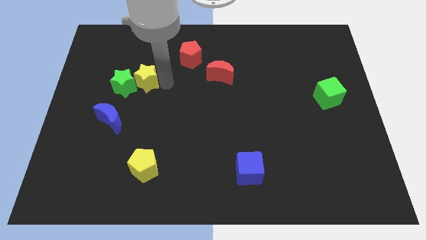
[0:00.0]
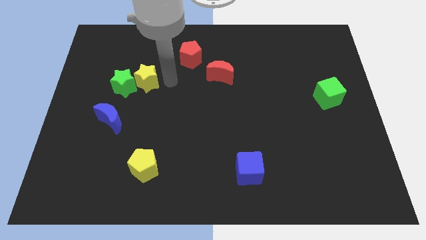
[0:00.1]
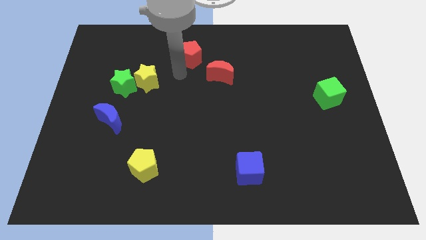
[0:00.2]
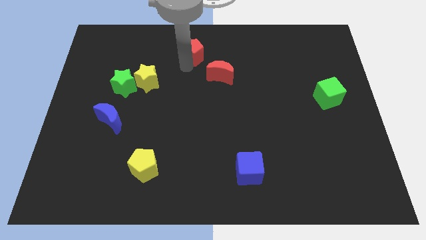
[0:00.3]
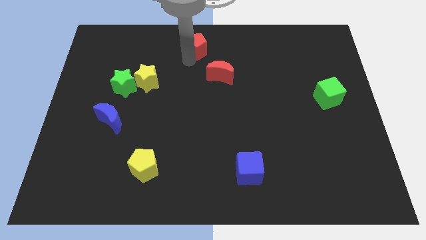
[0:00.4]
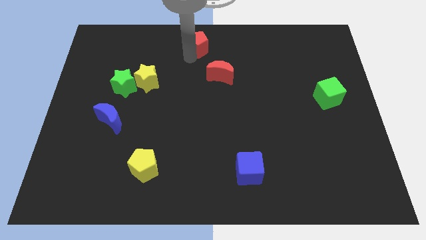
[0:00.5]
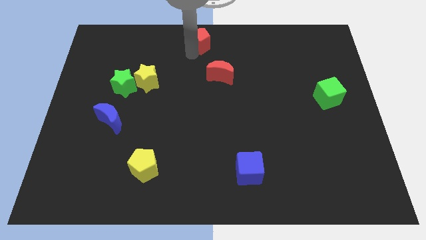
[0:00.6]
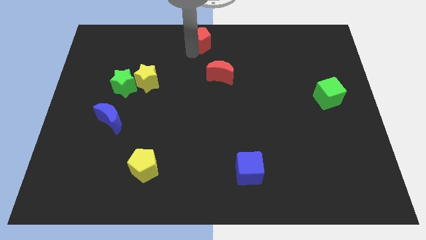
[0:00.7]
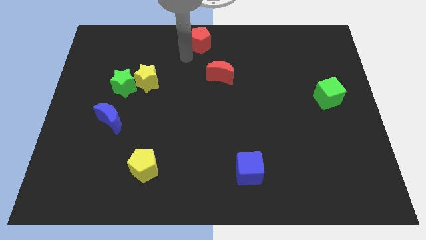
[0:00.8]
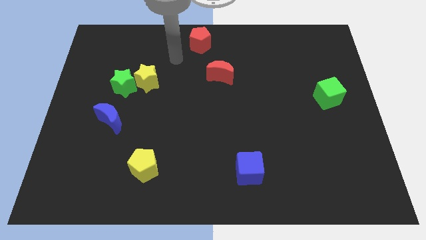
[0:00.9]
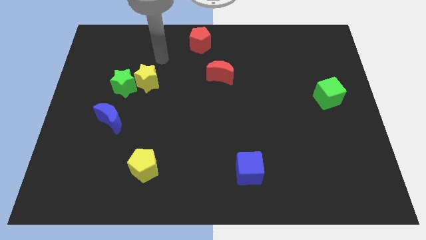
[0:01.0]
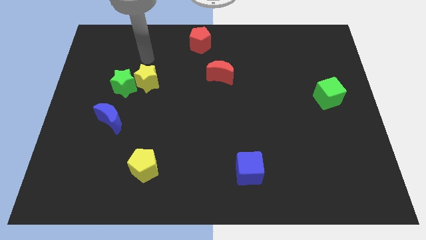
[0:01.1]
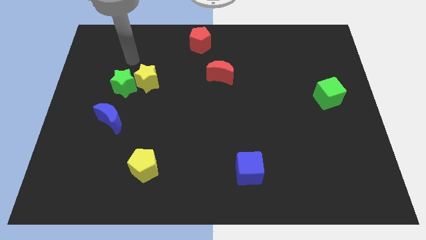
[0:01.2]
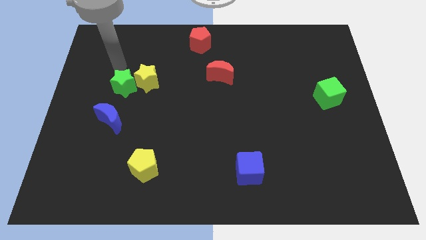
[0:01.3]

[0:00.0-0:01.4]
move the red pentagon to the top center of the boaard

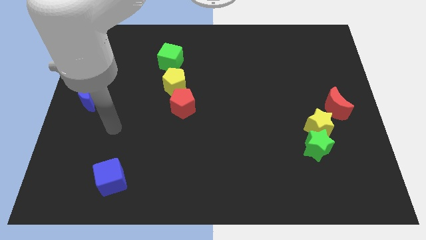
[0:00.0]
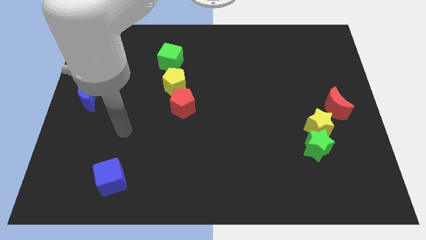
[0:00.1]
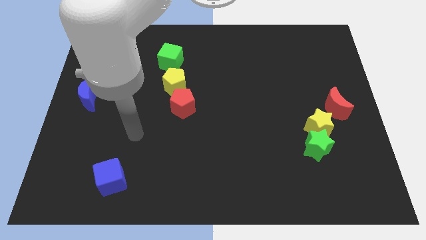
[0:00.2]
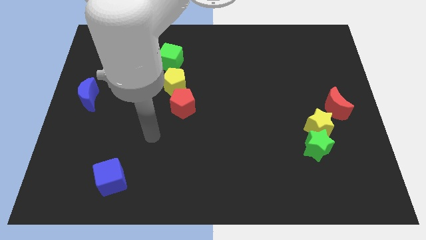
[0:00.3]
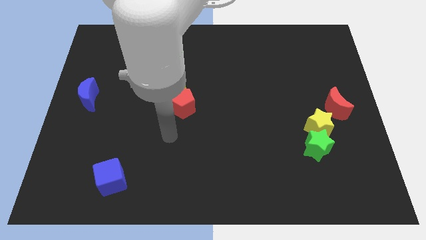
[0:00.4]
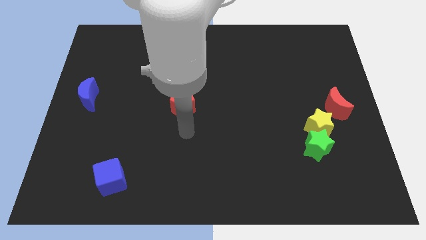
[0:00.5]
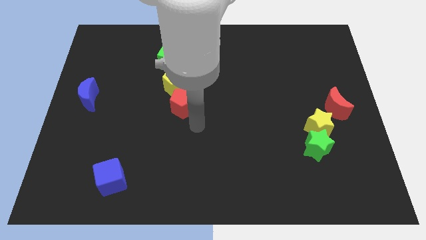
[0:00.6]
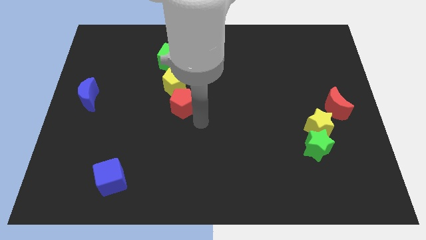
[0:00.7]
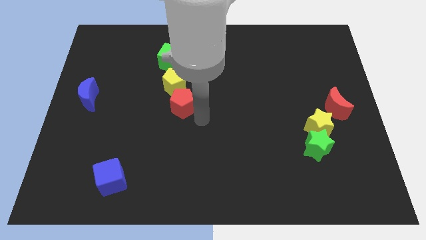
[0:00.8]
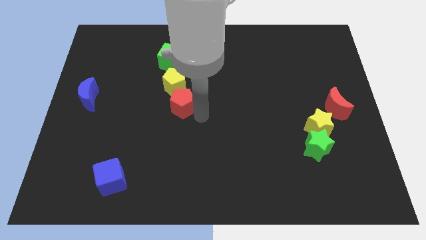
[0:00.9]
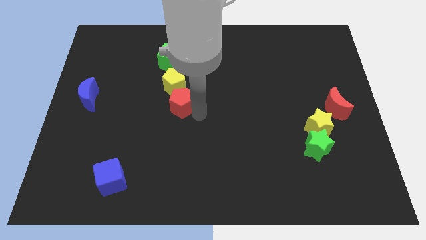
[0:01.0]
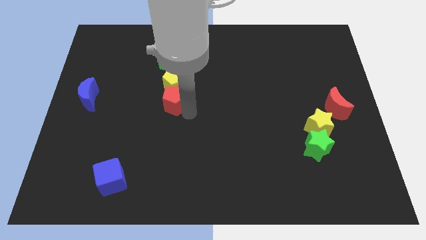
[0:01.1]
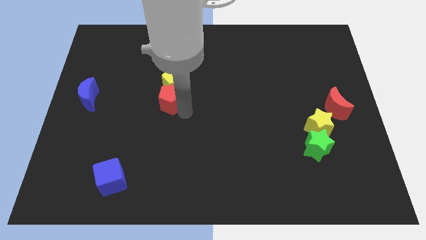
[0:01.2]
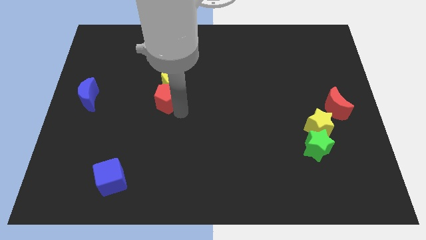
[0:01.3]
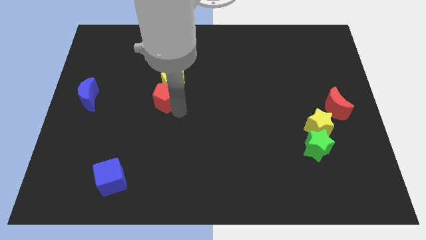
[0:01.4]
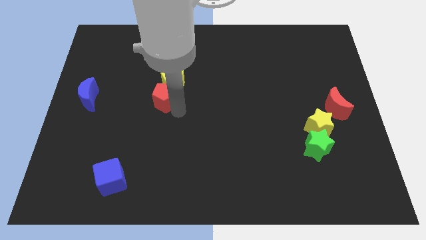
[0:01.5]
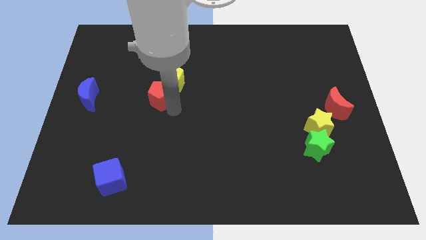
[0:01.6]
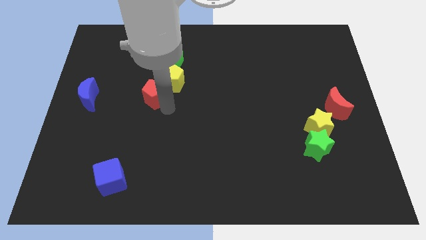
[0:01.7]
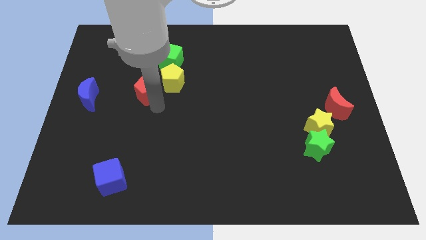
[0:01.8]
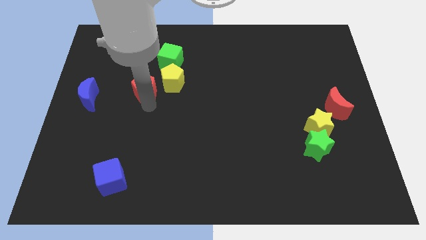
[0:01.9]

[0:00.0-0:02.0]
separate the red pentagon from the yellow pentagon

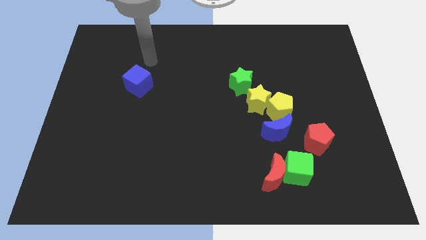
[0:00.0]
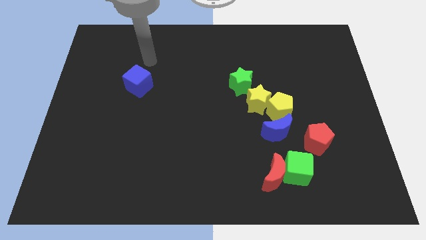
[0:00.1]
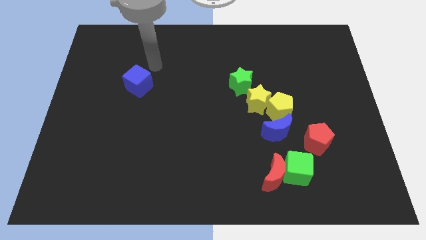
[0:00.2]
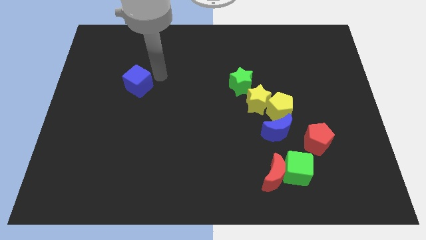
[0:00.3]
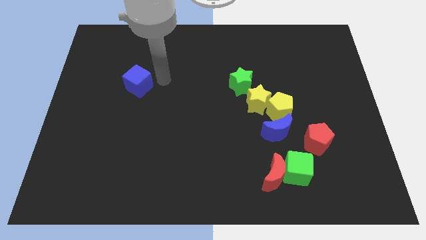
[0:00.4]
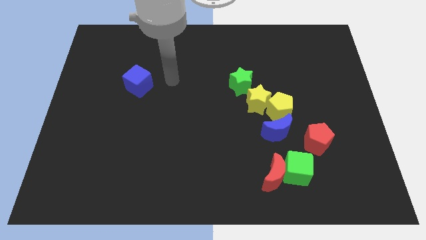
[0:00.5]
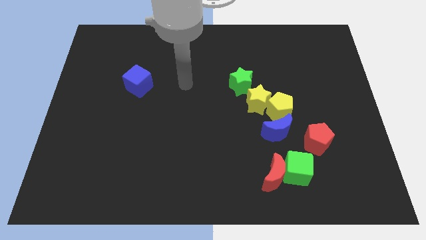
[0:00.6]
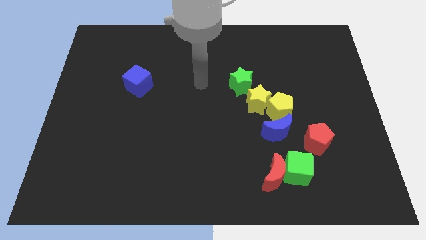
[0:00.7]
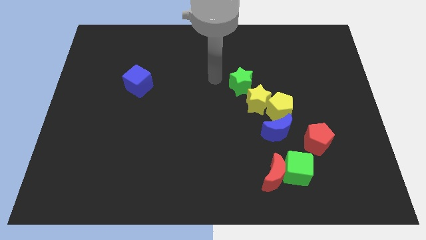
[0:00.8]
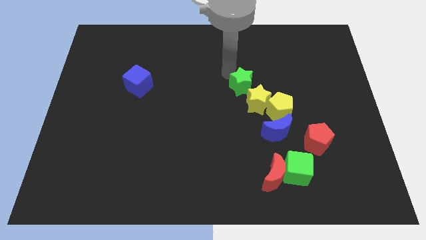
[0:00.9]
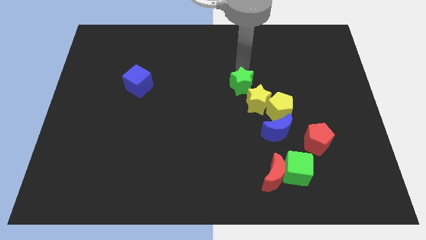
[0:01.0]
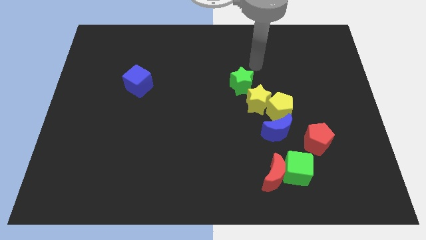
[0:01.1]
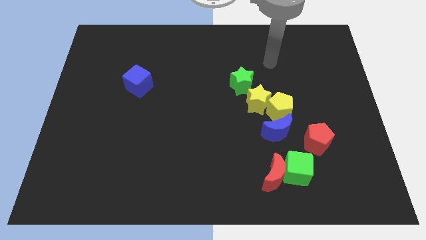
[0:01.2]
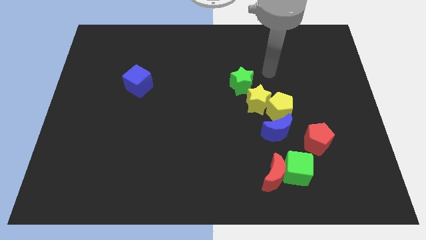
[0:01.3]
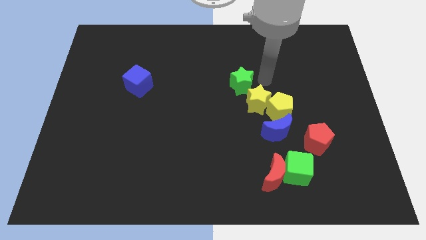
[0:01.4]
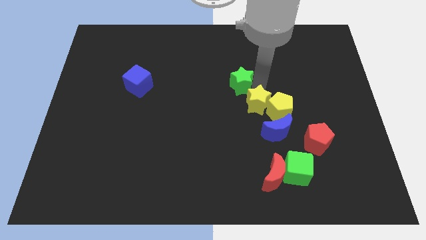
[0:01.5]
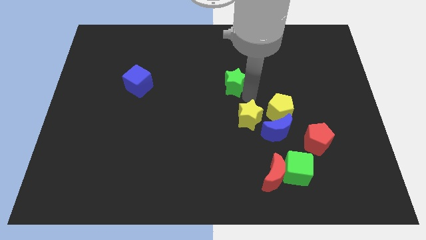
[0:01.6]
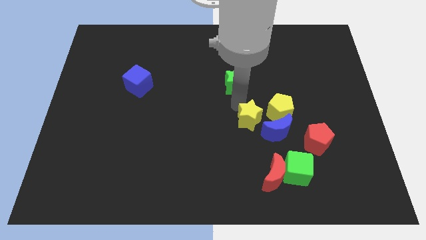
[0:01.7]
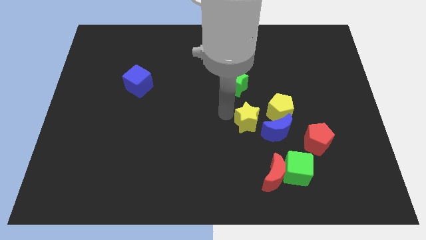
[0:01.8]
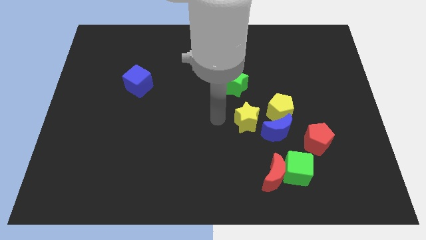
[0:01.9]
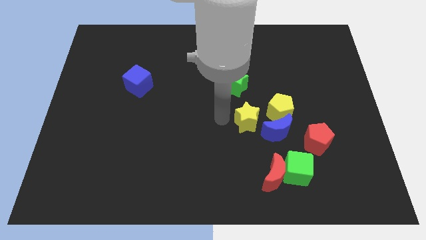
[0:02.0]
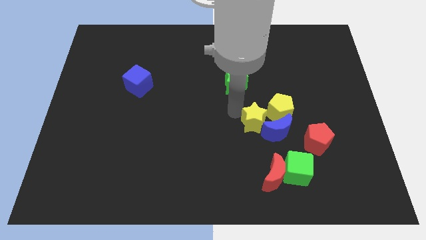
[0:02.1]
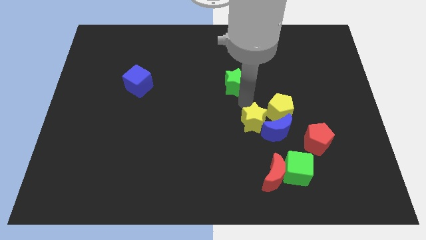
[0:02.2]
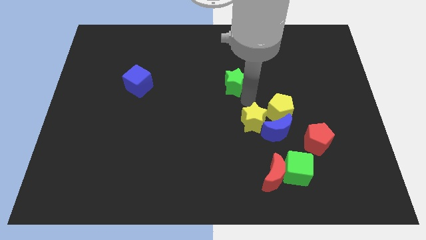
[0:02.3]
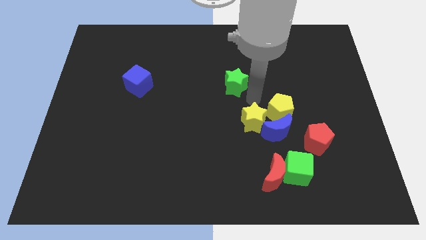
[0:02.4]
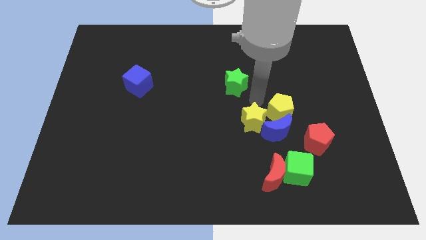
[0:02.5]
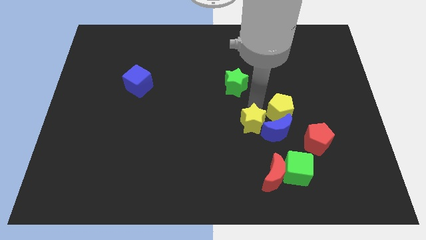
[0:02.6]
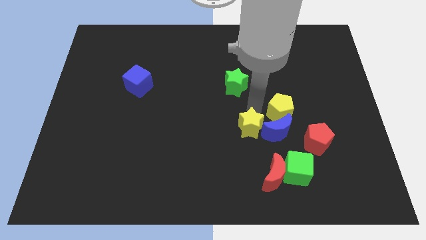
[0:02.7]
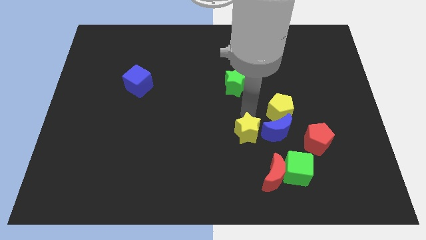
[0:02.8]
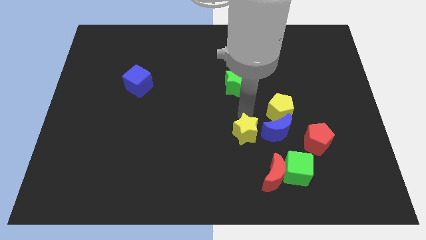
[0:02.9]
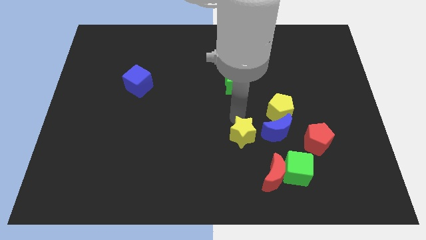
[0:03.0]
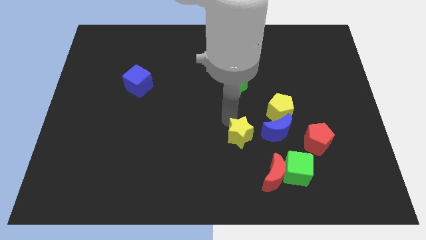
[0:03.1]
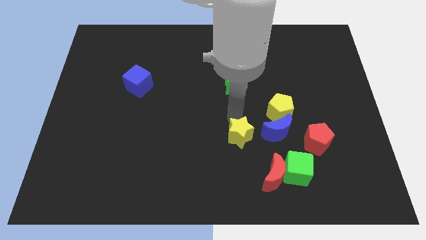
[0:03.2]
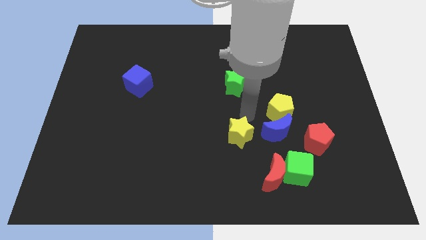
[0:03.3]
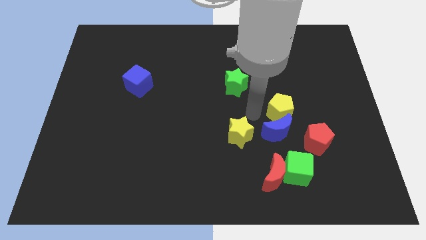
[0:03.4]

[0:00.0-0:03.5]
separate yellow star from green star yellow pentagon

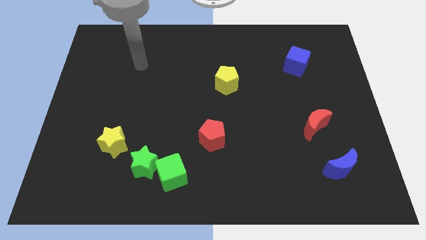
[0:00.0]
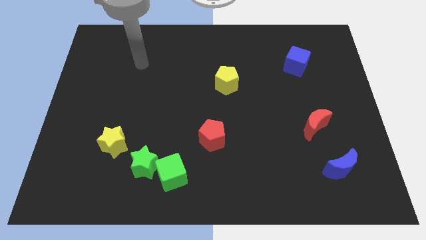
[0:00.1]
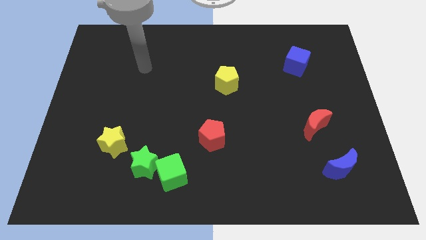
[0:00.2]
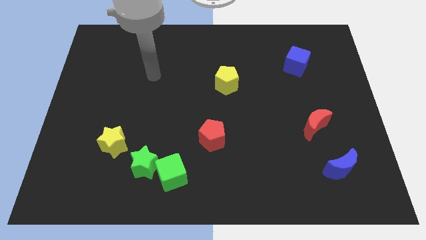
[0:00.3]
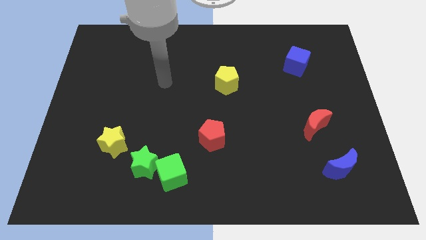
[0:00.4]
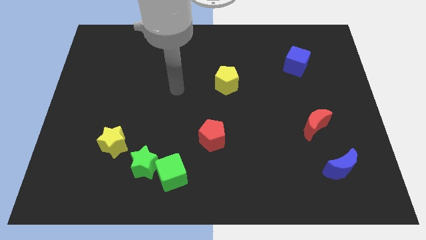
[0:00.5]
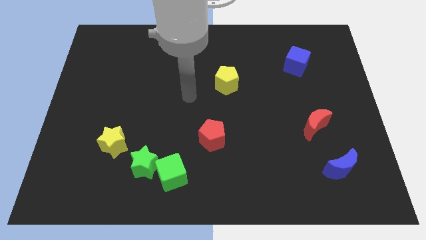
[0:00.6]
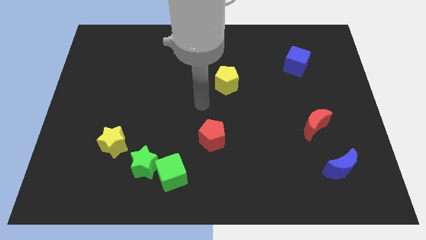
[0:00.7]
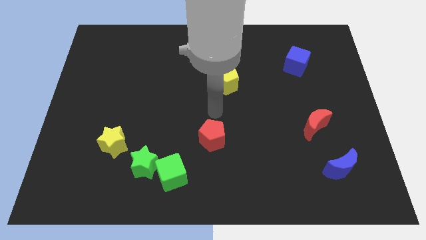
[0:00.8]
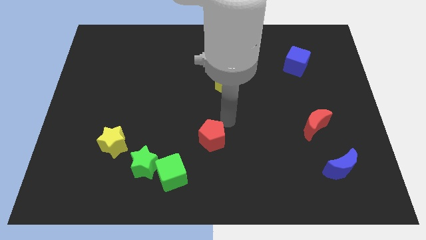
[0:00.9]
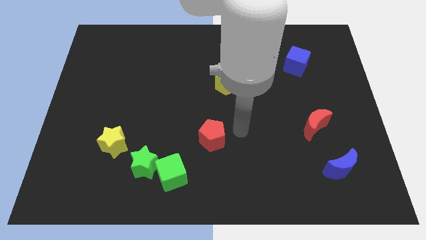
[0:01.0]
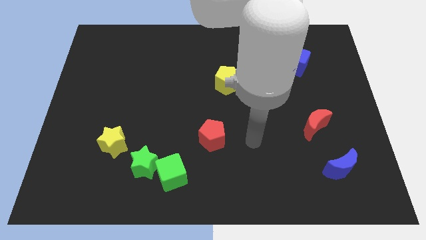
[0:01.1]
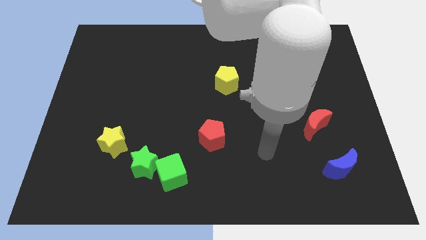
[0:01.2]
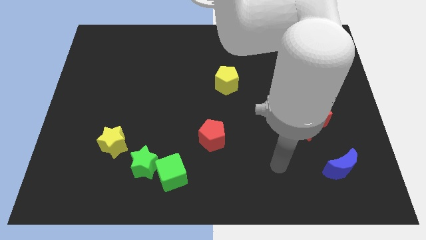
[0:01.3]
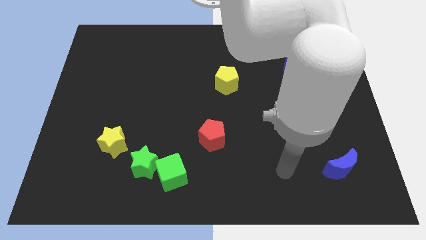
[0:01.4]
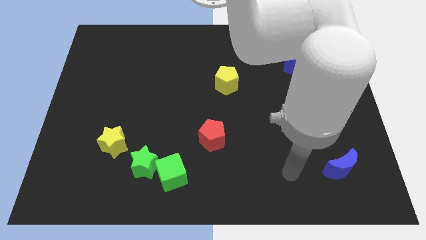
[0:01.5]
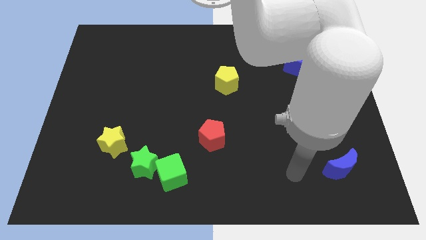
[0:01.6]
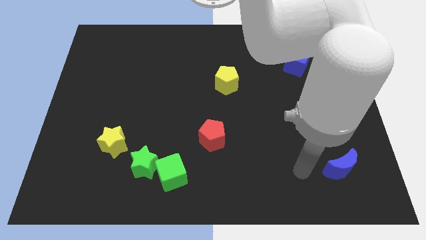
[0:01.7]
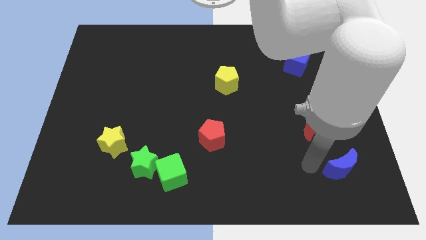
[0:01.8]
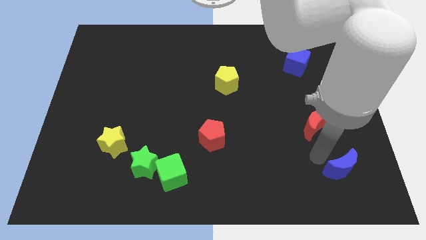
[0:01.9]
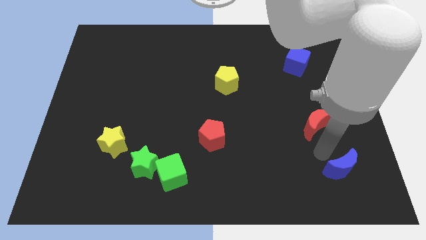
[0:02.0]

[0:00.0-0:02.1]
move your arm in between the moons

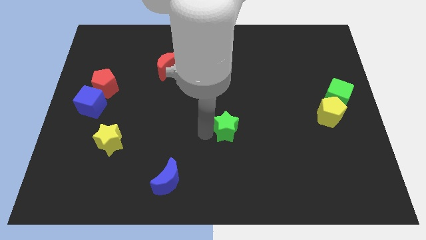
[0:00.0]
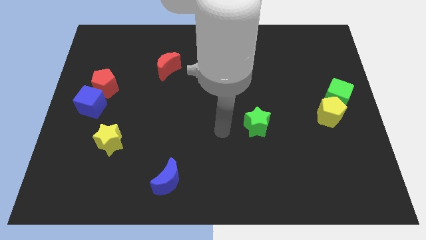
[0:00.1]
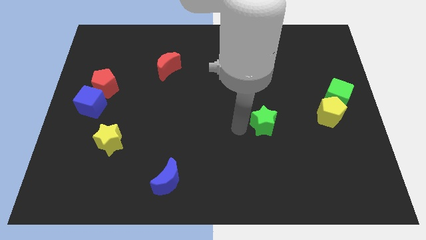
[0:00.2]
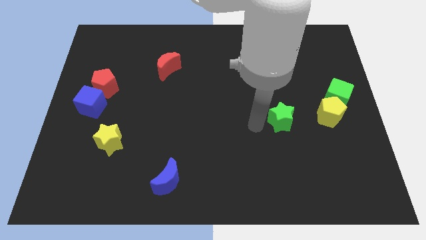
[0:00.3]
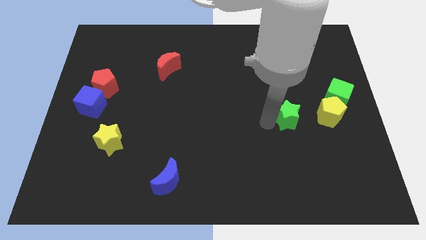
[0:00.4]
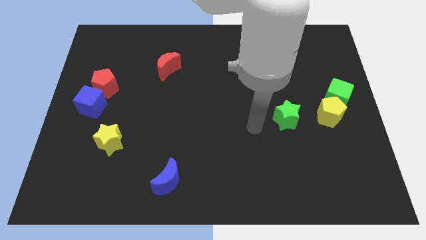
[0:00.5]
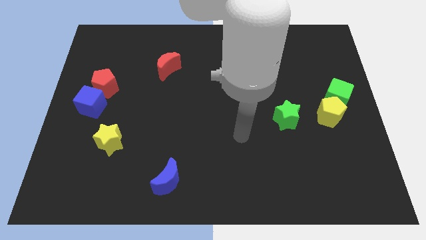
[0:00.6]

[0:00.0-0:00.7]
push the green star towards the yellow pentagon
